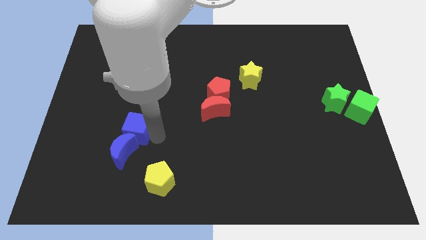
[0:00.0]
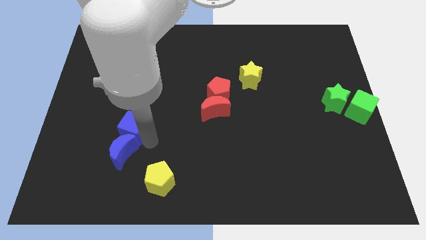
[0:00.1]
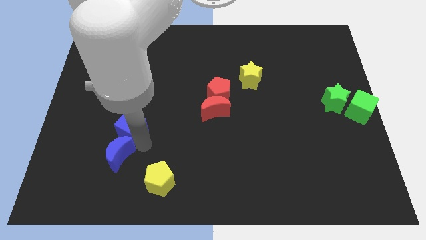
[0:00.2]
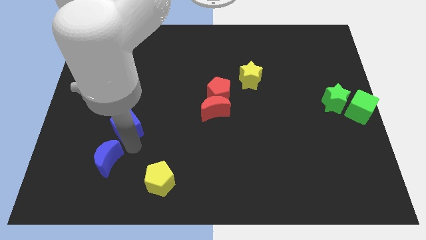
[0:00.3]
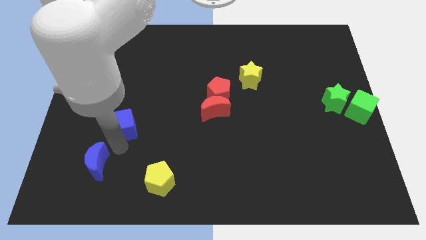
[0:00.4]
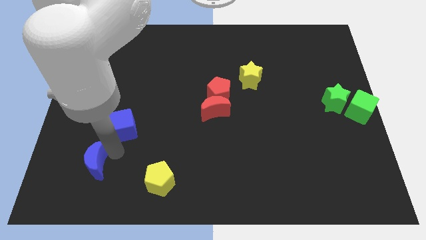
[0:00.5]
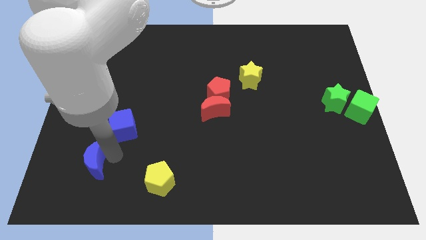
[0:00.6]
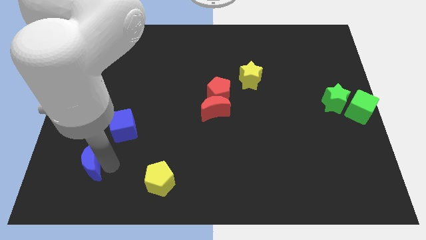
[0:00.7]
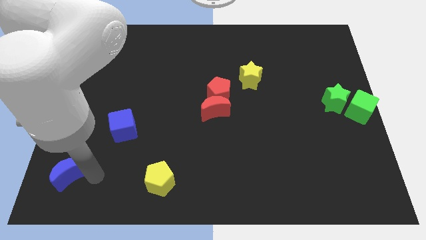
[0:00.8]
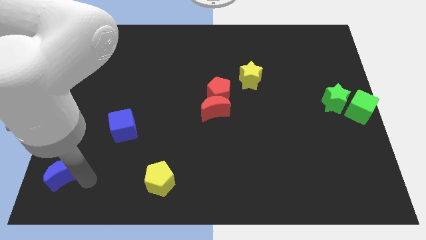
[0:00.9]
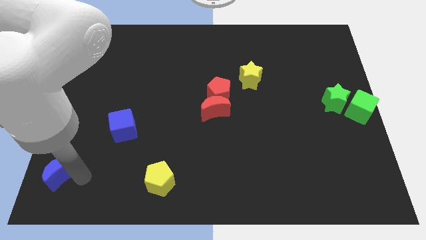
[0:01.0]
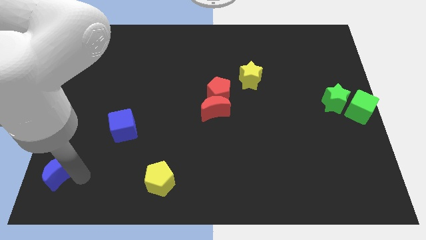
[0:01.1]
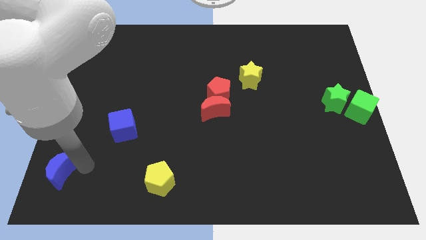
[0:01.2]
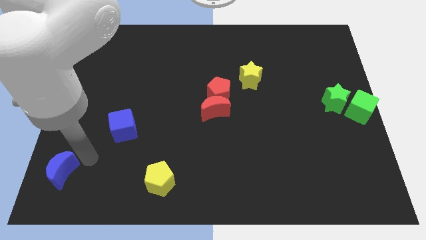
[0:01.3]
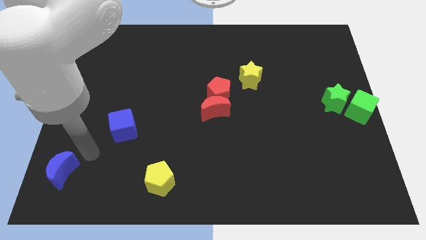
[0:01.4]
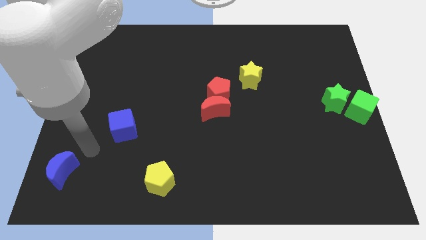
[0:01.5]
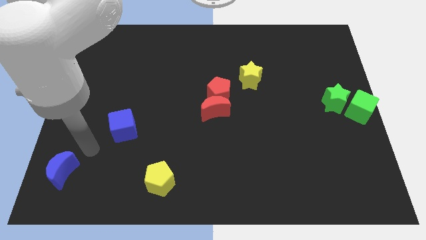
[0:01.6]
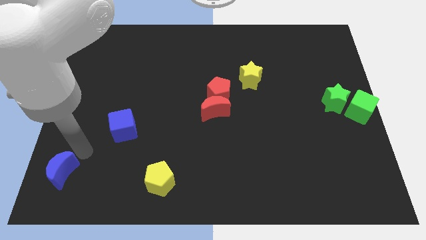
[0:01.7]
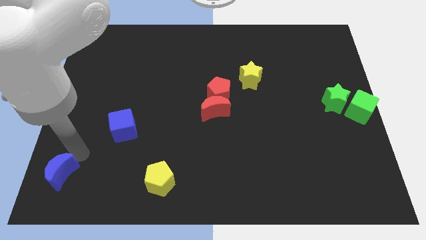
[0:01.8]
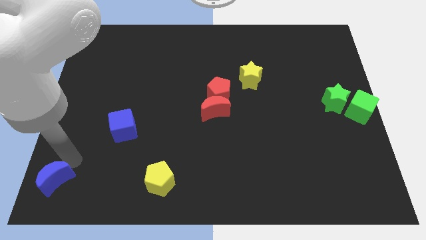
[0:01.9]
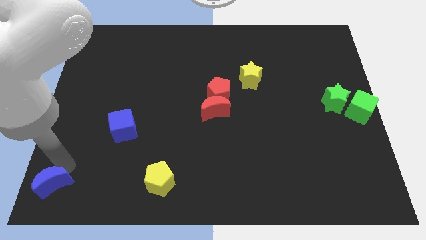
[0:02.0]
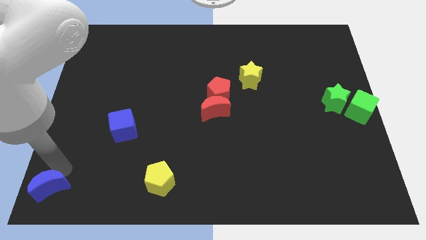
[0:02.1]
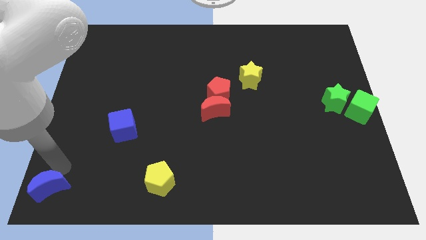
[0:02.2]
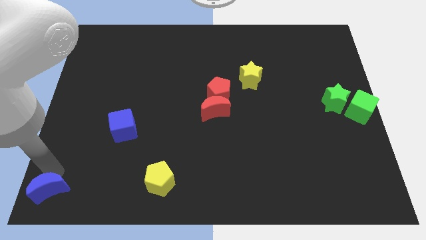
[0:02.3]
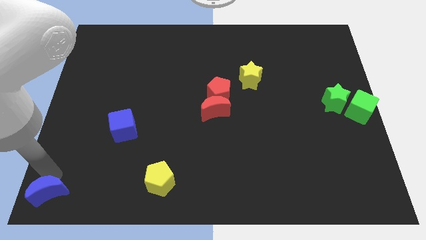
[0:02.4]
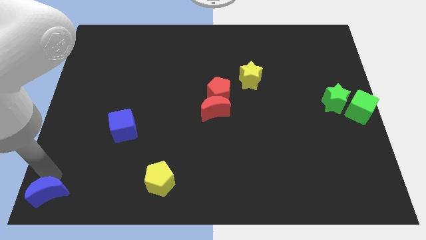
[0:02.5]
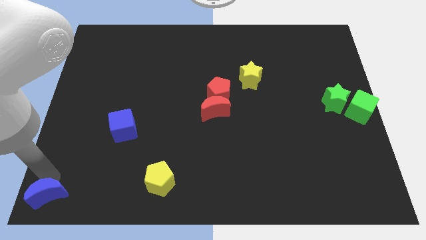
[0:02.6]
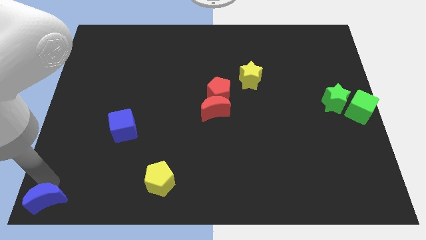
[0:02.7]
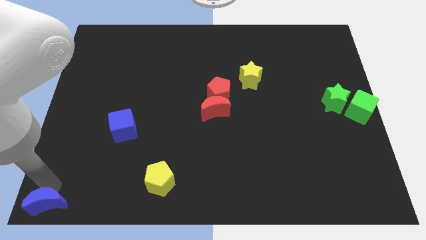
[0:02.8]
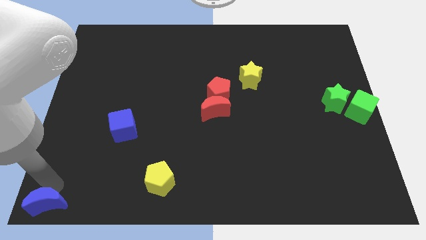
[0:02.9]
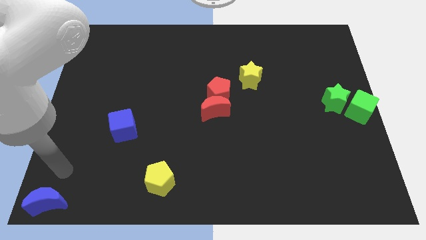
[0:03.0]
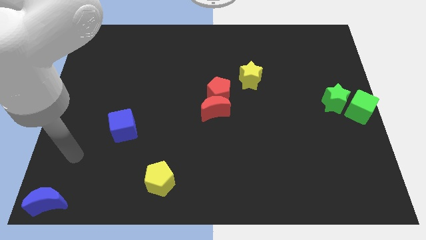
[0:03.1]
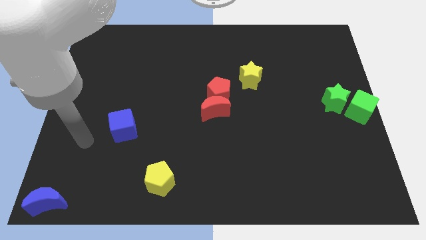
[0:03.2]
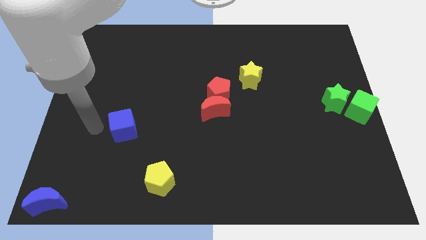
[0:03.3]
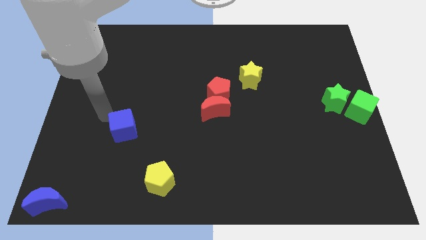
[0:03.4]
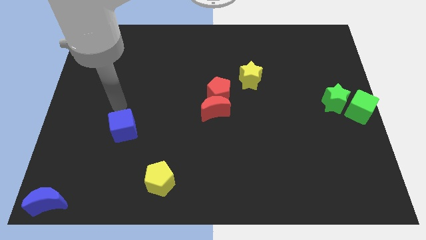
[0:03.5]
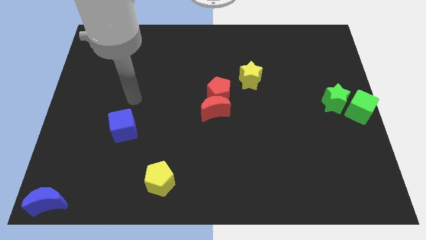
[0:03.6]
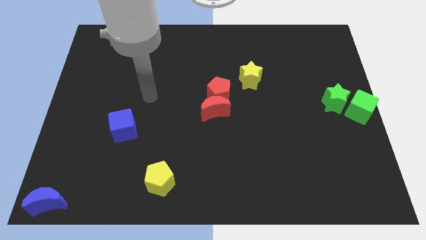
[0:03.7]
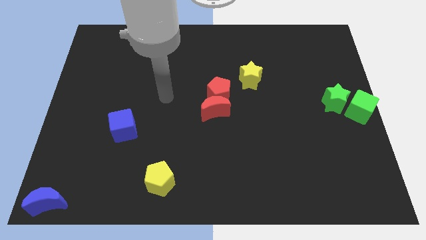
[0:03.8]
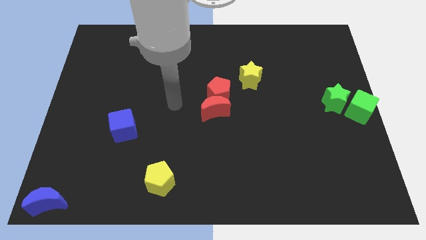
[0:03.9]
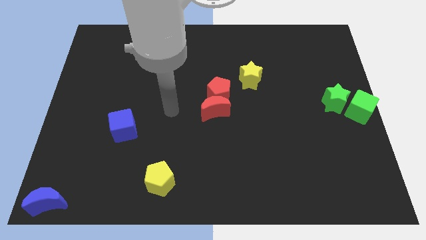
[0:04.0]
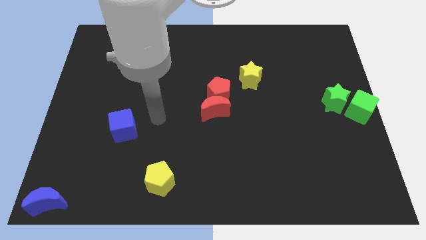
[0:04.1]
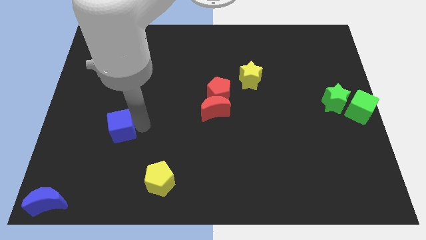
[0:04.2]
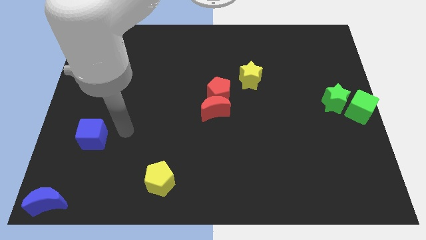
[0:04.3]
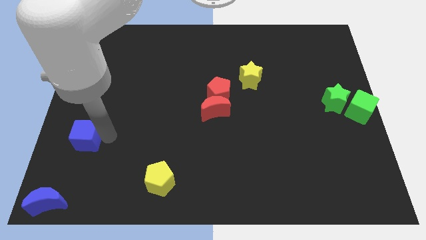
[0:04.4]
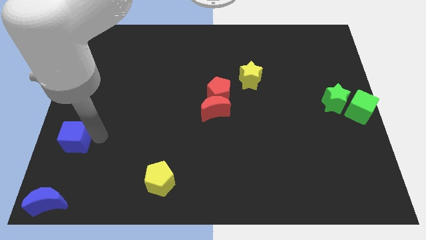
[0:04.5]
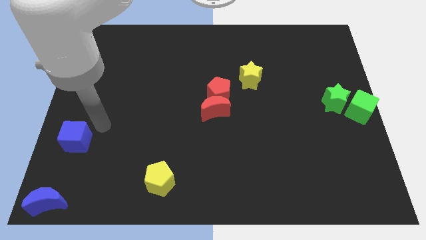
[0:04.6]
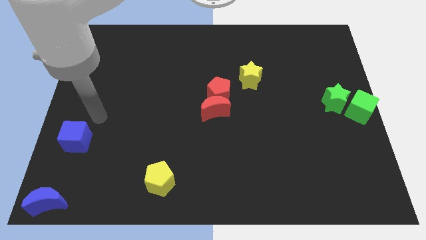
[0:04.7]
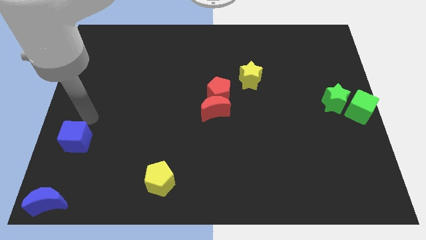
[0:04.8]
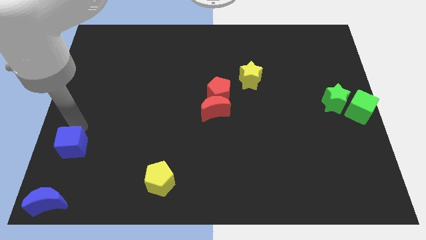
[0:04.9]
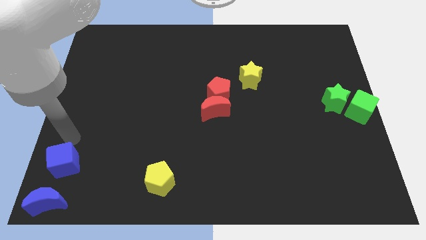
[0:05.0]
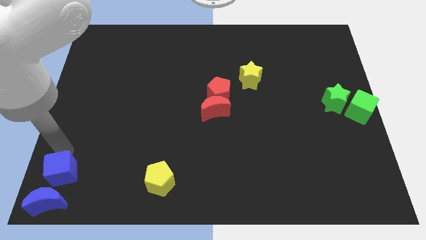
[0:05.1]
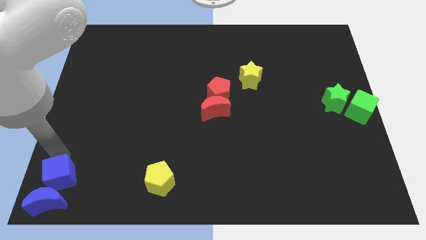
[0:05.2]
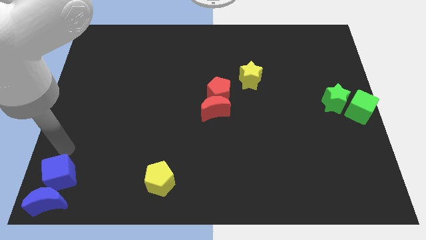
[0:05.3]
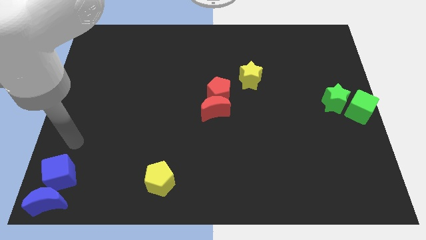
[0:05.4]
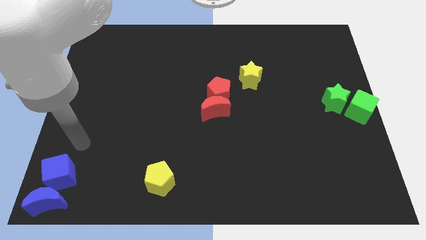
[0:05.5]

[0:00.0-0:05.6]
move the blue blocks to bottom left corner of the board

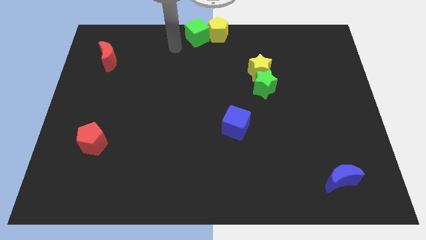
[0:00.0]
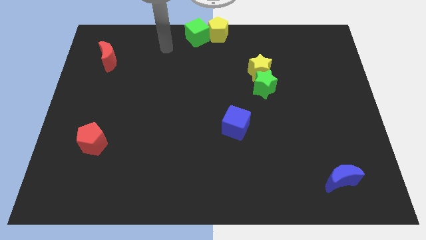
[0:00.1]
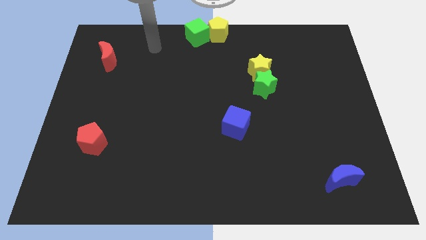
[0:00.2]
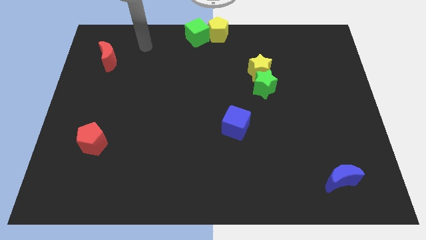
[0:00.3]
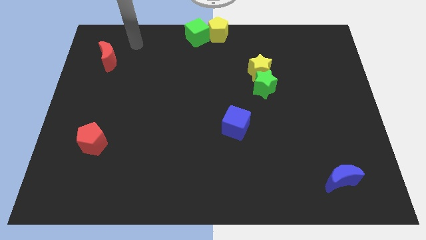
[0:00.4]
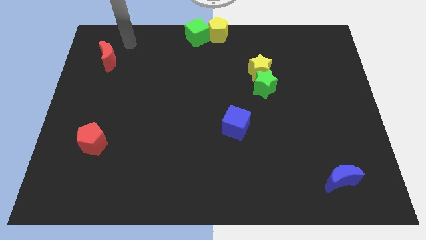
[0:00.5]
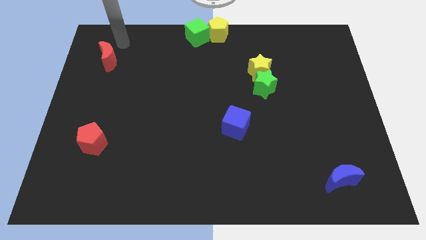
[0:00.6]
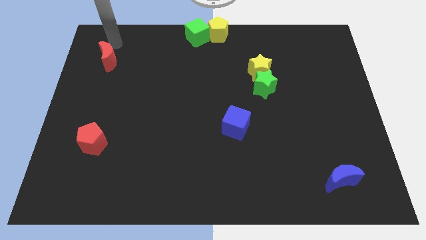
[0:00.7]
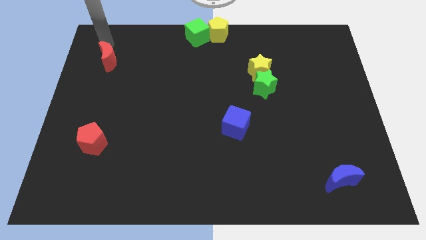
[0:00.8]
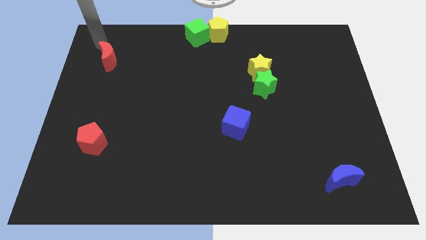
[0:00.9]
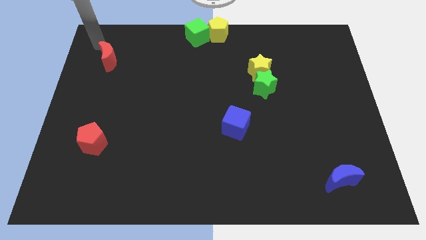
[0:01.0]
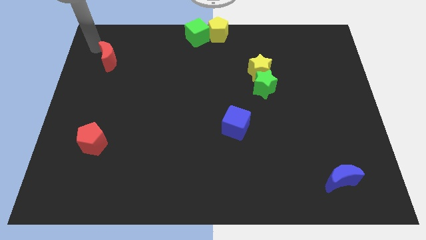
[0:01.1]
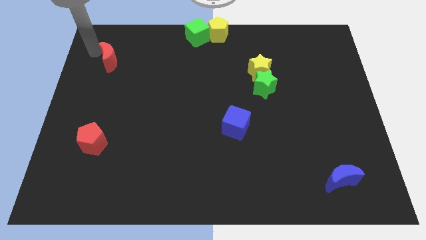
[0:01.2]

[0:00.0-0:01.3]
tap the top side of the red crescent

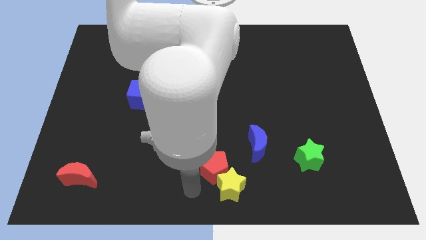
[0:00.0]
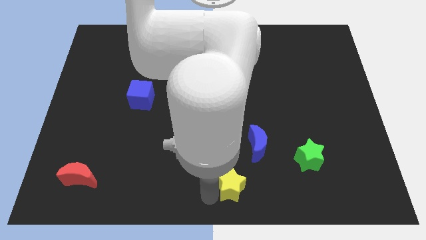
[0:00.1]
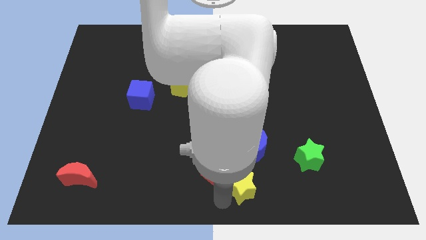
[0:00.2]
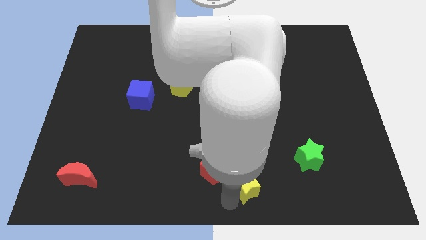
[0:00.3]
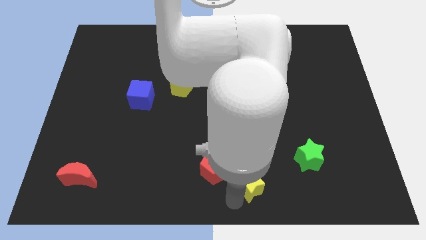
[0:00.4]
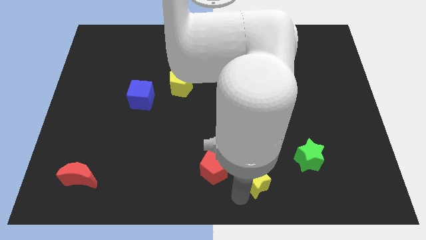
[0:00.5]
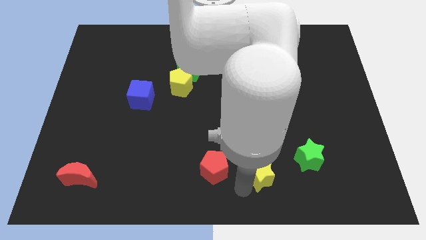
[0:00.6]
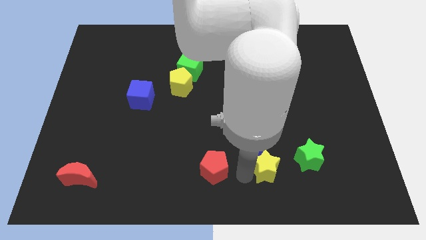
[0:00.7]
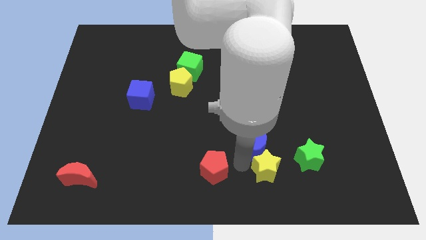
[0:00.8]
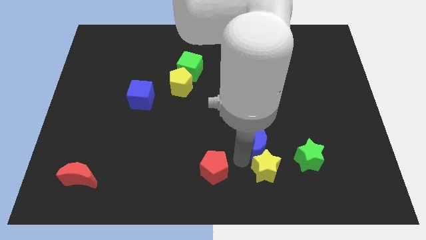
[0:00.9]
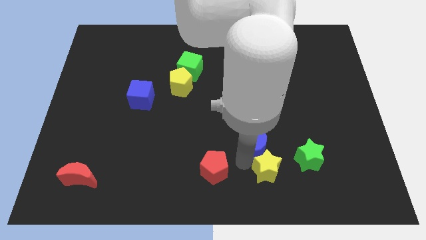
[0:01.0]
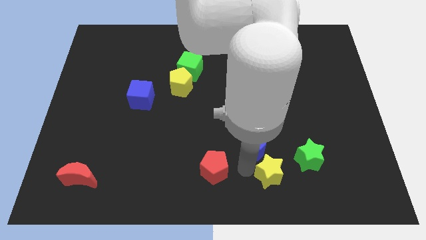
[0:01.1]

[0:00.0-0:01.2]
separate yellow star from red pentagon

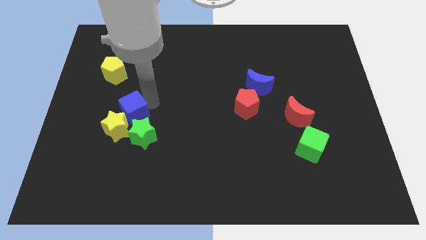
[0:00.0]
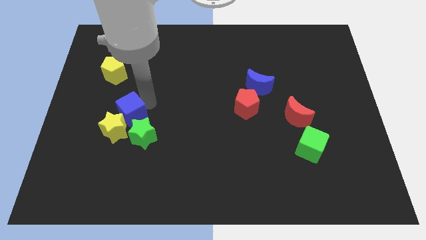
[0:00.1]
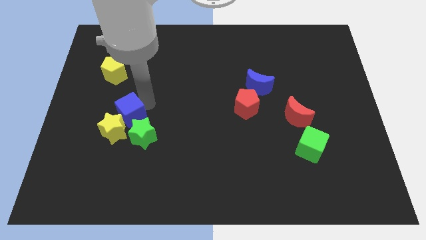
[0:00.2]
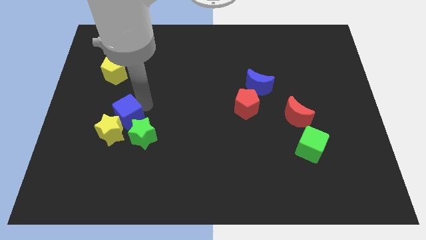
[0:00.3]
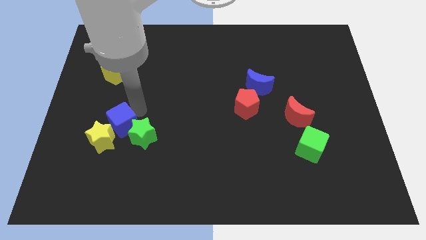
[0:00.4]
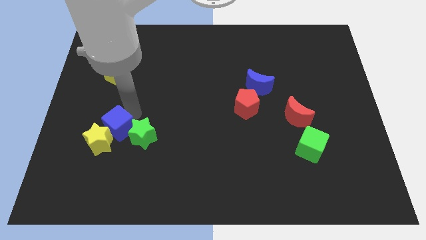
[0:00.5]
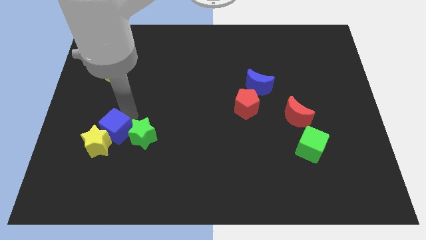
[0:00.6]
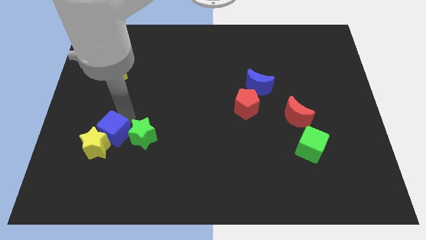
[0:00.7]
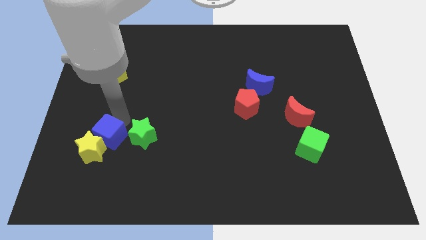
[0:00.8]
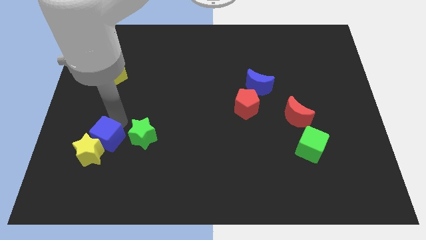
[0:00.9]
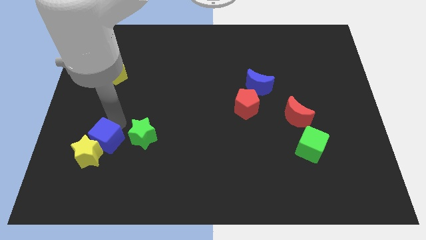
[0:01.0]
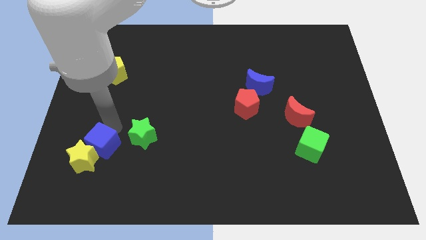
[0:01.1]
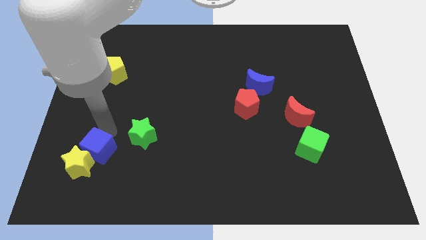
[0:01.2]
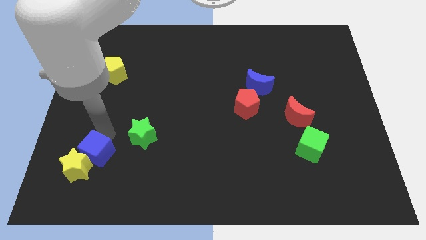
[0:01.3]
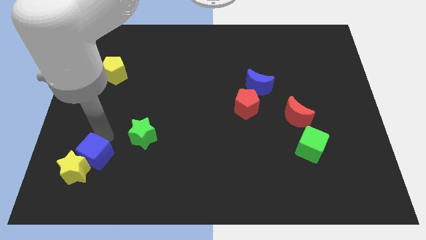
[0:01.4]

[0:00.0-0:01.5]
push the blue cube along with the yellow star towards the bottom left of the board
